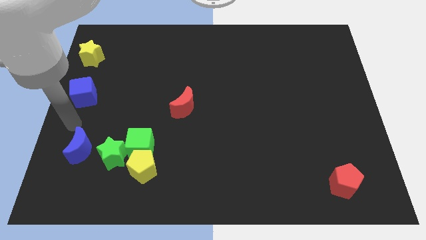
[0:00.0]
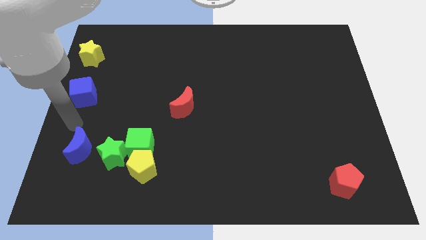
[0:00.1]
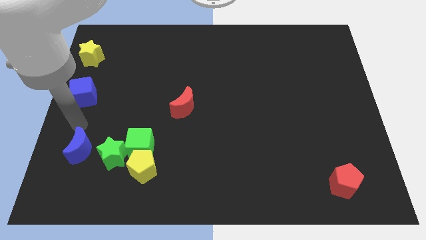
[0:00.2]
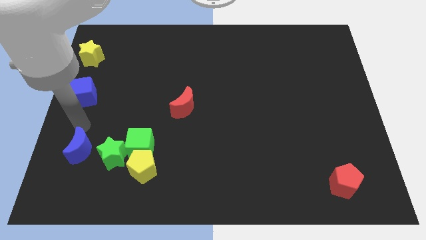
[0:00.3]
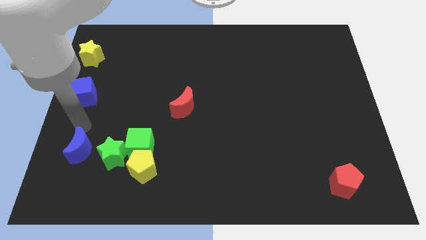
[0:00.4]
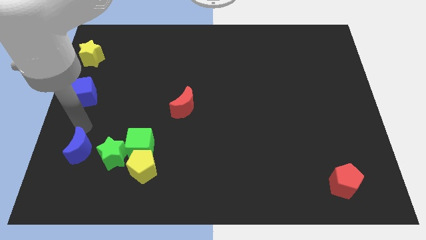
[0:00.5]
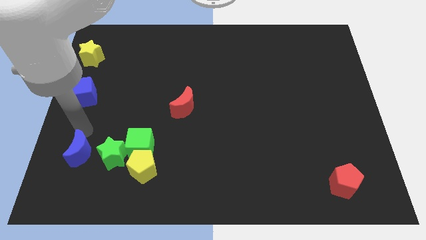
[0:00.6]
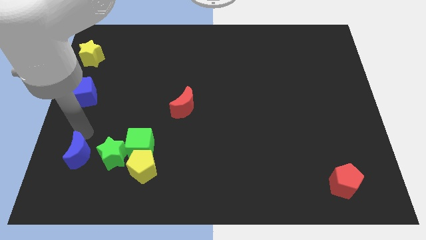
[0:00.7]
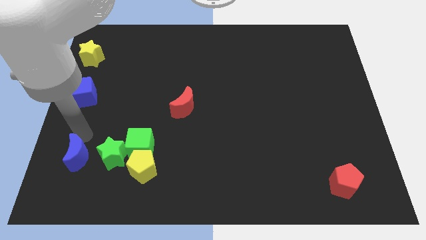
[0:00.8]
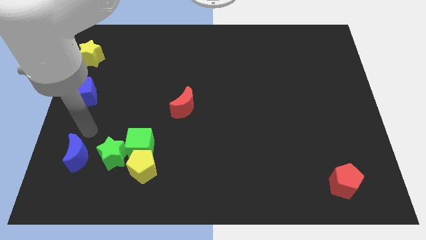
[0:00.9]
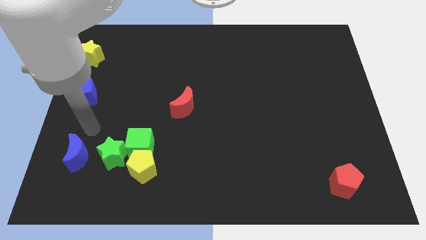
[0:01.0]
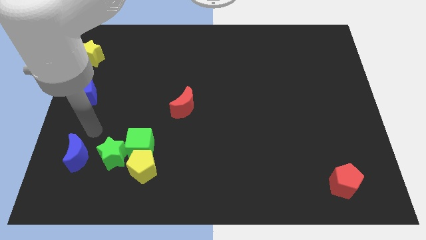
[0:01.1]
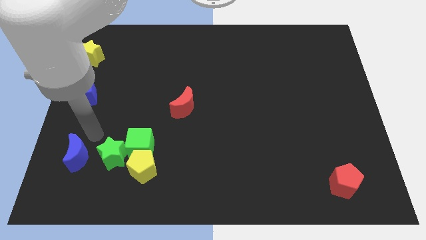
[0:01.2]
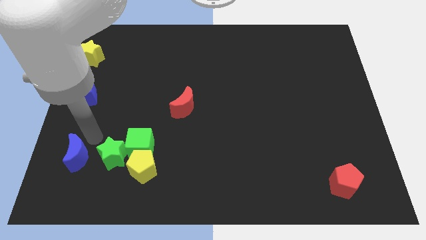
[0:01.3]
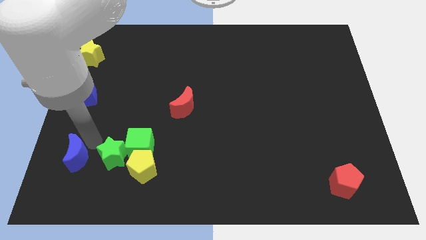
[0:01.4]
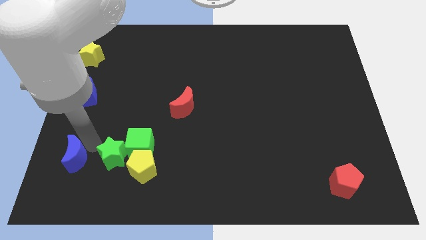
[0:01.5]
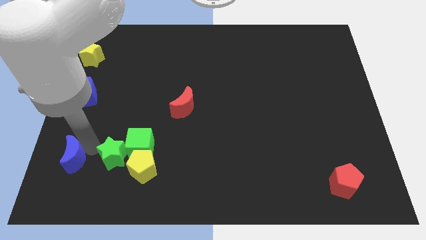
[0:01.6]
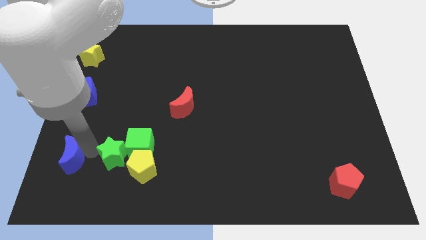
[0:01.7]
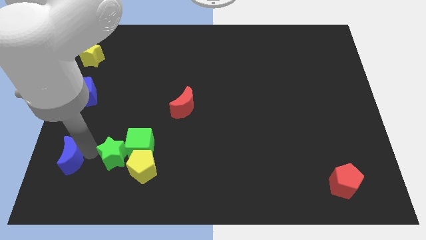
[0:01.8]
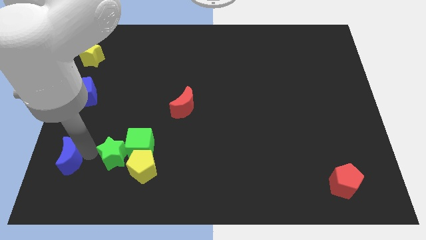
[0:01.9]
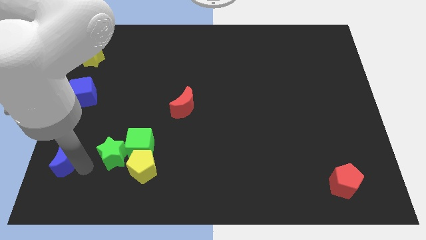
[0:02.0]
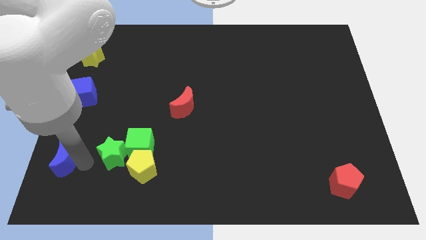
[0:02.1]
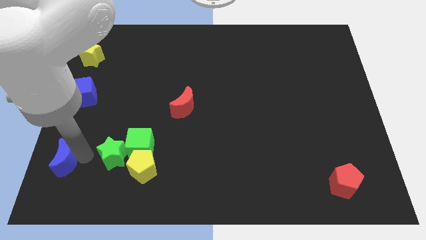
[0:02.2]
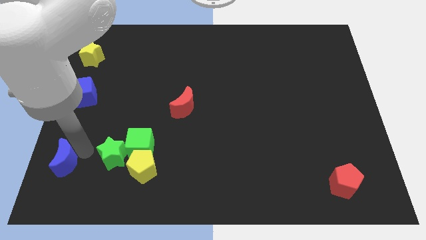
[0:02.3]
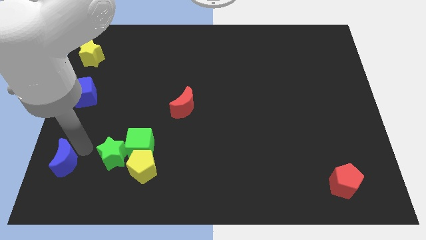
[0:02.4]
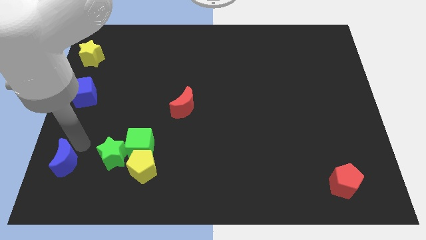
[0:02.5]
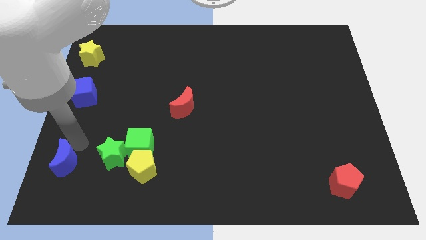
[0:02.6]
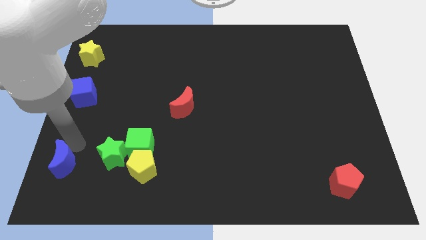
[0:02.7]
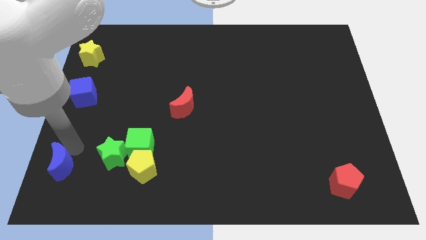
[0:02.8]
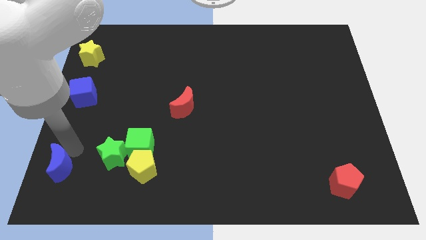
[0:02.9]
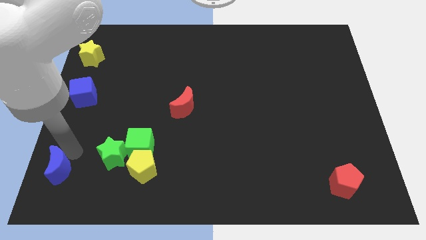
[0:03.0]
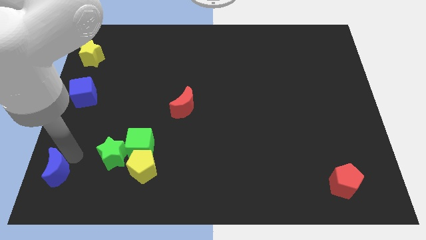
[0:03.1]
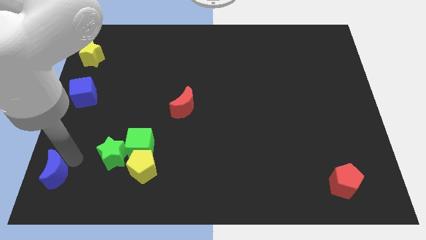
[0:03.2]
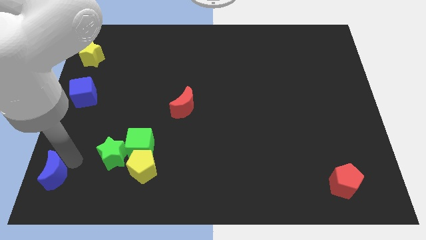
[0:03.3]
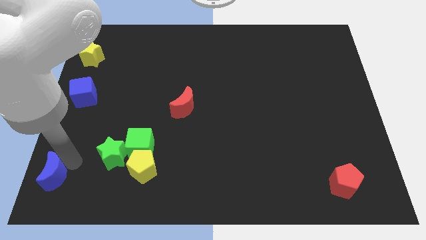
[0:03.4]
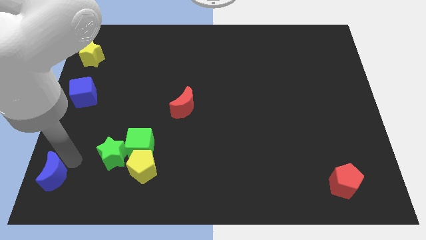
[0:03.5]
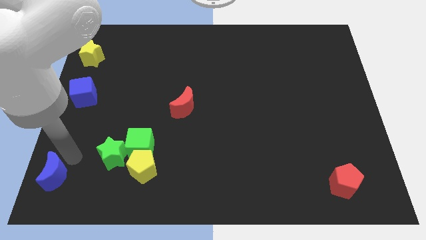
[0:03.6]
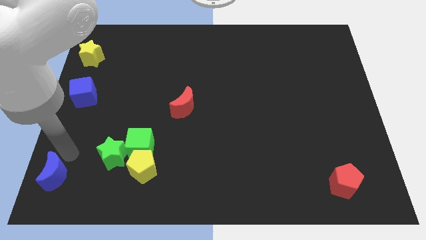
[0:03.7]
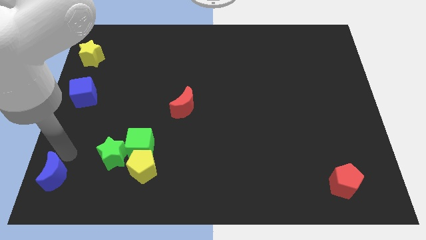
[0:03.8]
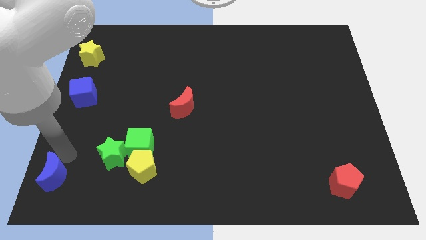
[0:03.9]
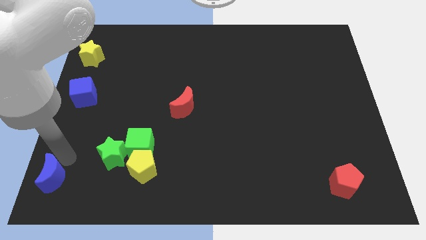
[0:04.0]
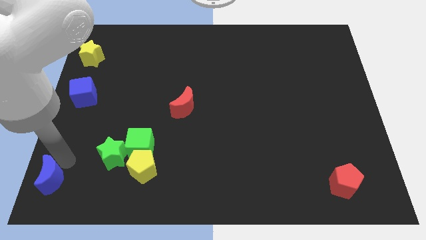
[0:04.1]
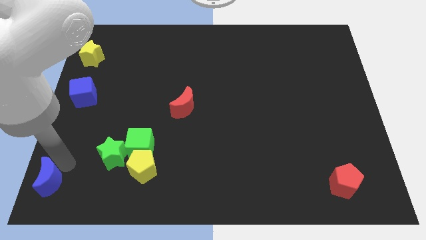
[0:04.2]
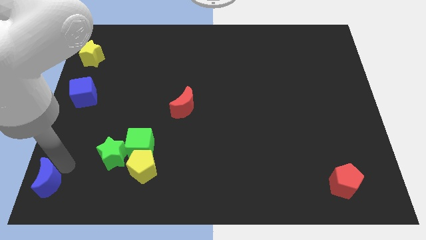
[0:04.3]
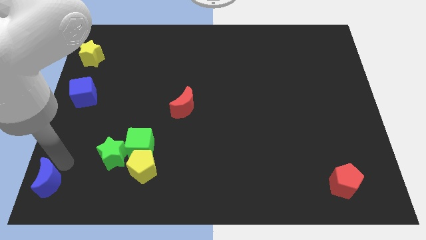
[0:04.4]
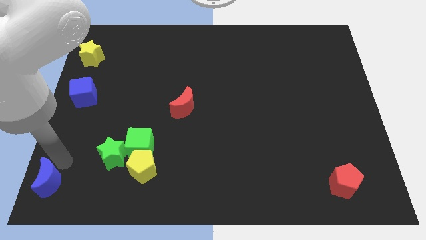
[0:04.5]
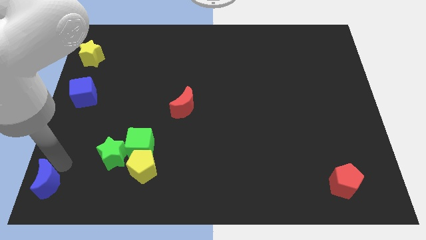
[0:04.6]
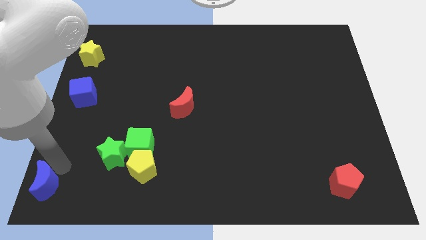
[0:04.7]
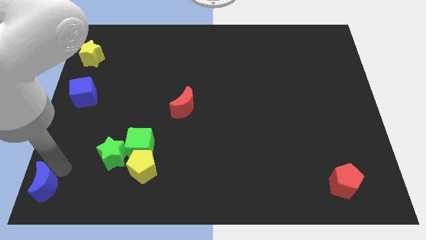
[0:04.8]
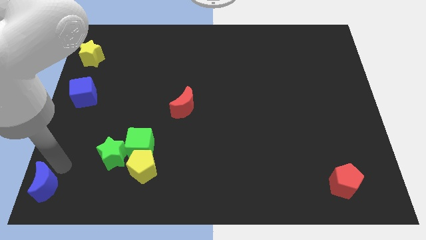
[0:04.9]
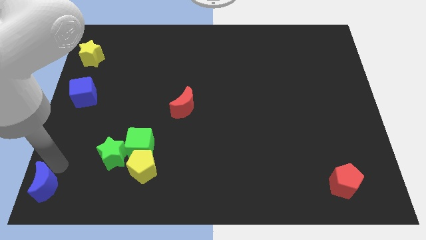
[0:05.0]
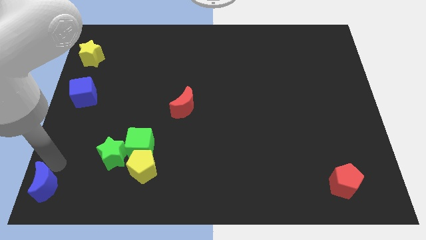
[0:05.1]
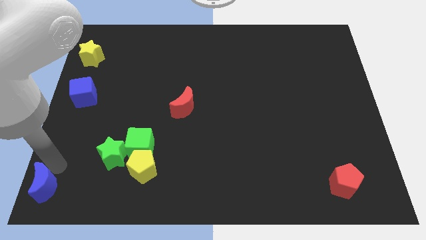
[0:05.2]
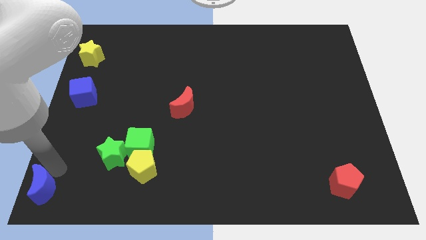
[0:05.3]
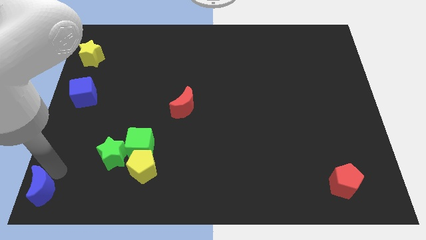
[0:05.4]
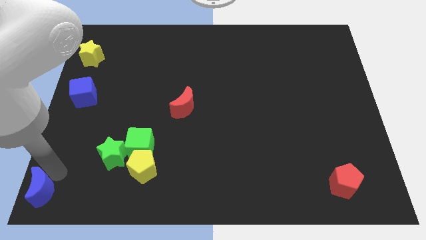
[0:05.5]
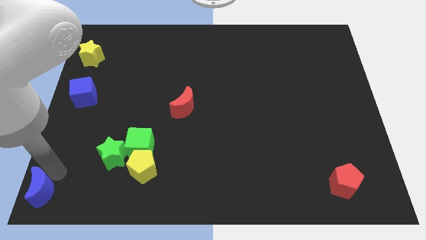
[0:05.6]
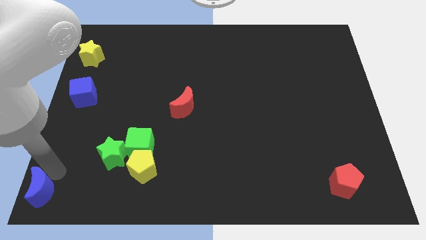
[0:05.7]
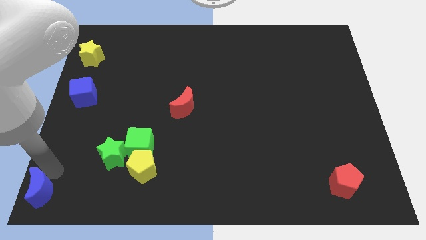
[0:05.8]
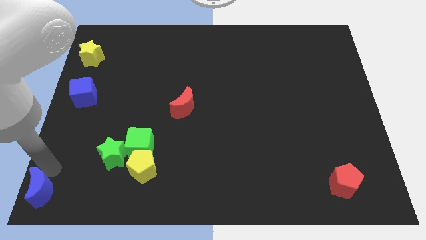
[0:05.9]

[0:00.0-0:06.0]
push the blue moon towards the bottom left side of the board

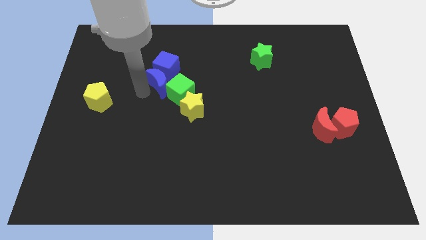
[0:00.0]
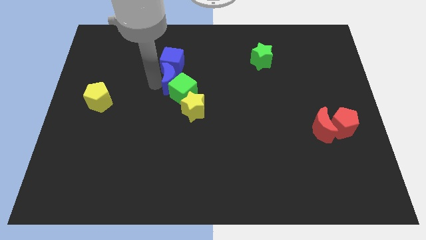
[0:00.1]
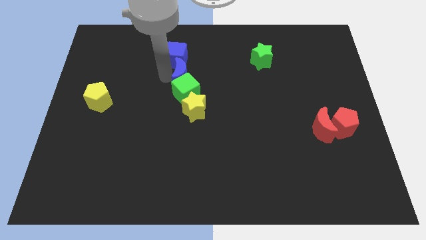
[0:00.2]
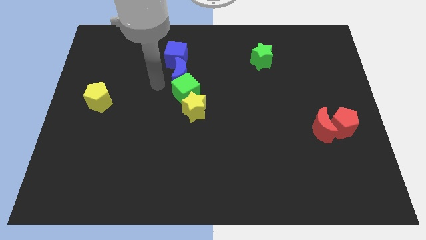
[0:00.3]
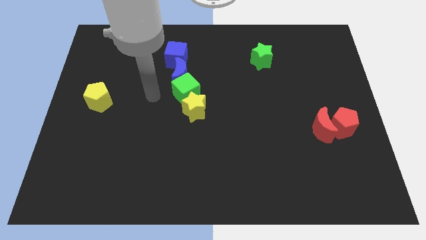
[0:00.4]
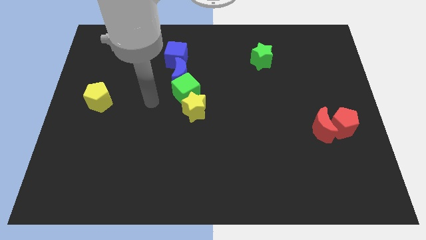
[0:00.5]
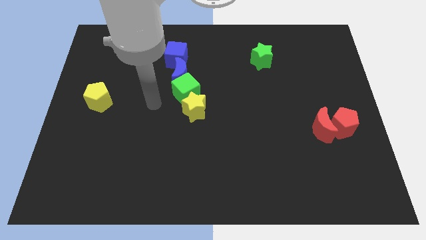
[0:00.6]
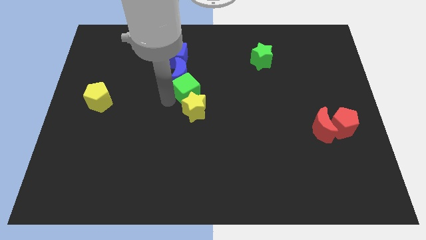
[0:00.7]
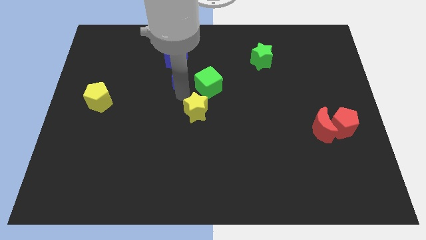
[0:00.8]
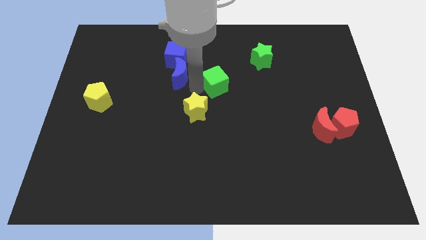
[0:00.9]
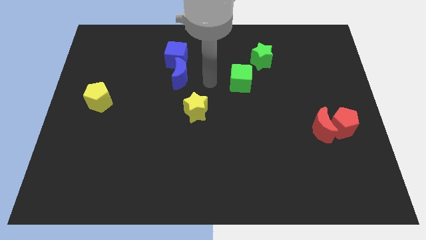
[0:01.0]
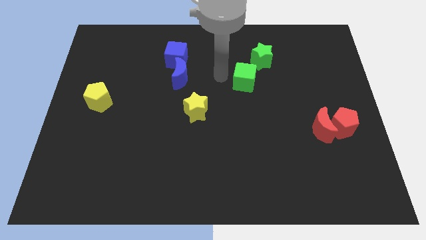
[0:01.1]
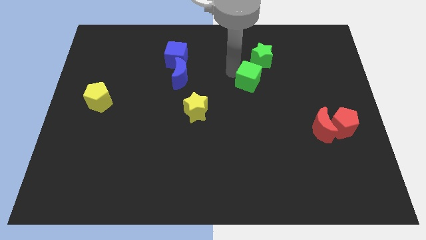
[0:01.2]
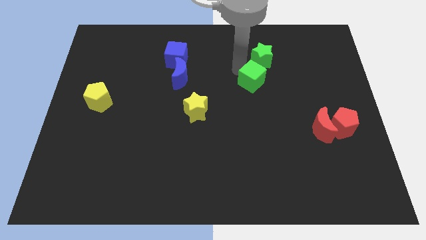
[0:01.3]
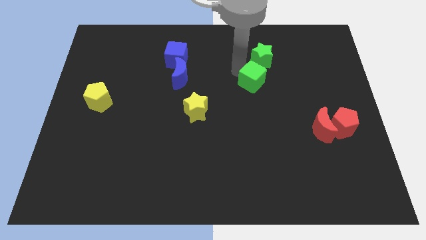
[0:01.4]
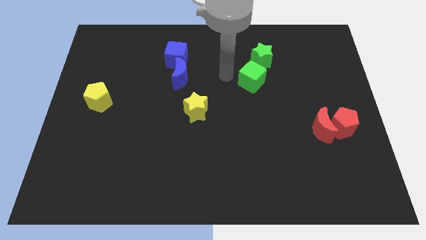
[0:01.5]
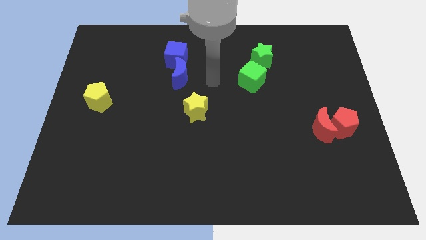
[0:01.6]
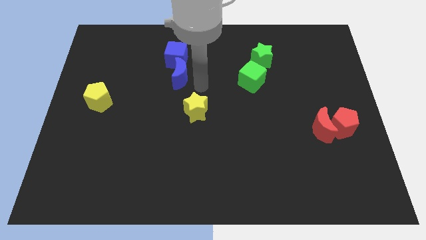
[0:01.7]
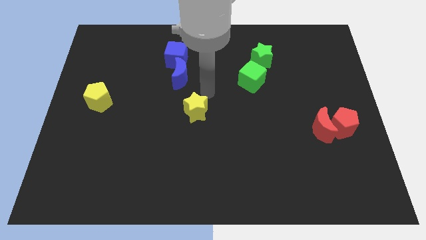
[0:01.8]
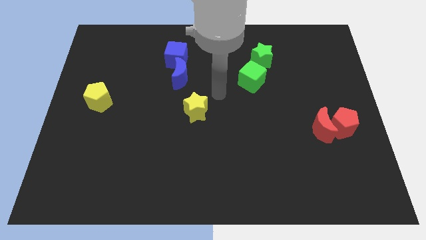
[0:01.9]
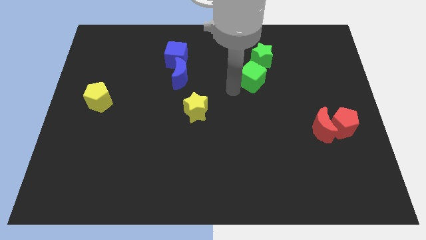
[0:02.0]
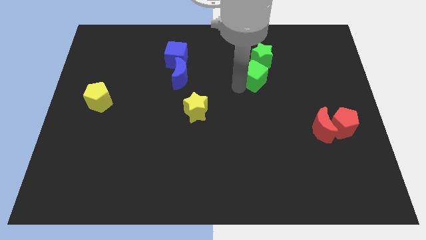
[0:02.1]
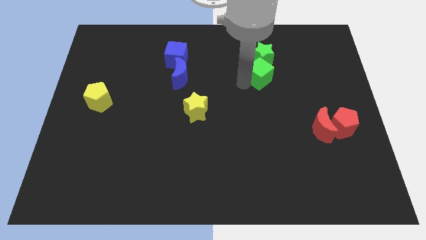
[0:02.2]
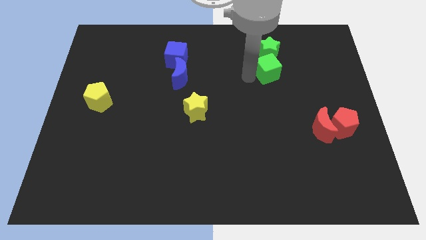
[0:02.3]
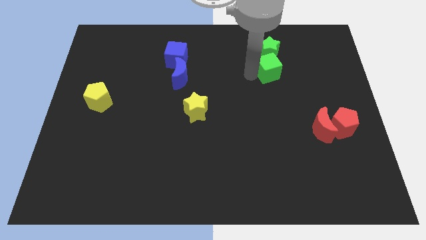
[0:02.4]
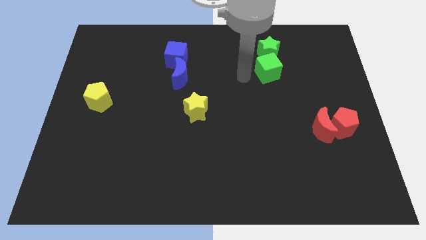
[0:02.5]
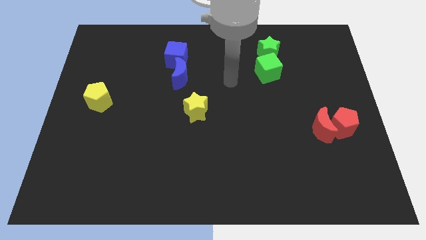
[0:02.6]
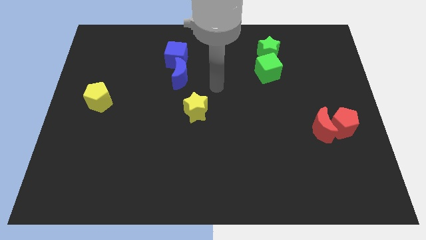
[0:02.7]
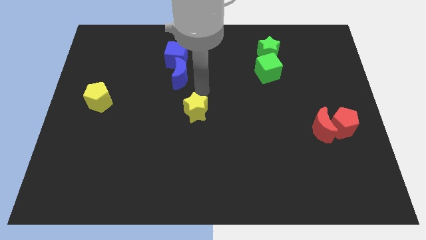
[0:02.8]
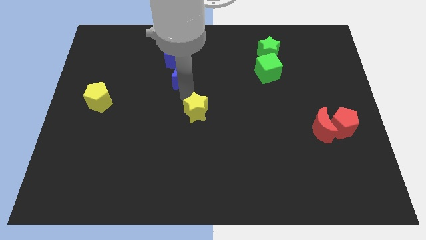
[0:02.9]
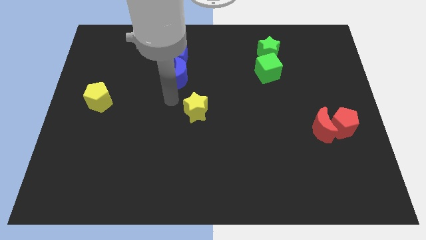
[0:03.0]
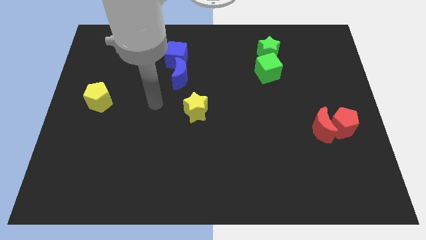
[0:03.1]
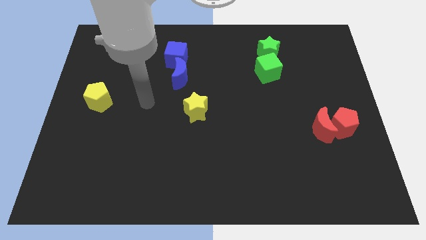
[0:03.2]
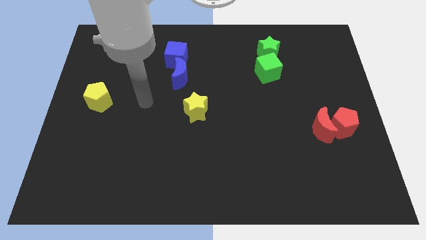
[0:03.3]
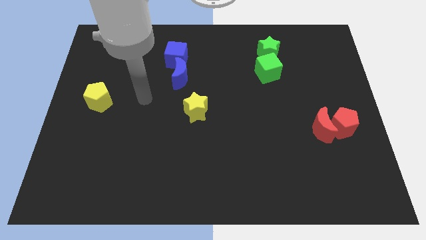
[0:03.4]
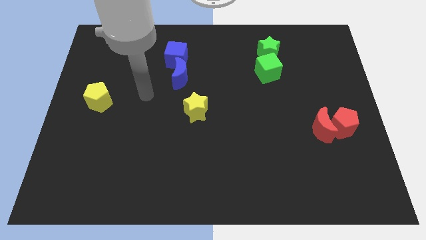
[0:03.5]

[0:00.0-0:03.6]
push the green cube into the green star
